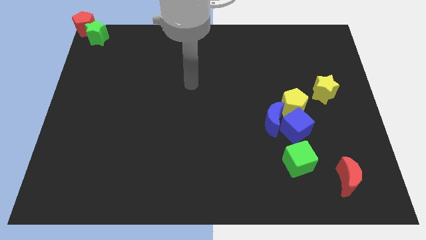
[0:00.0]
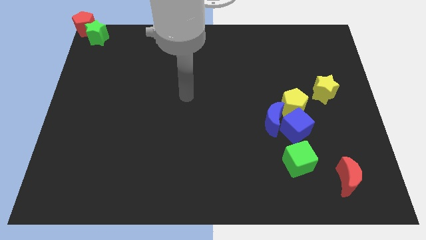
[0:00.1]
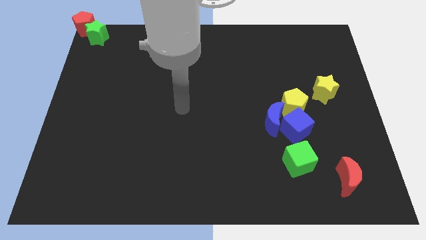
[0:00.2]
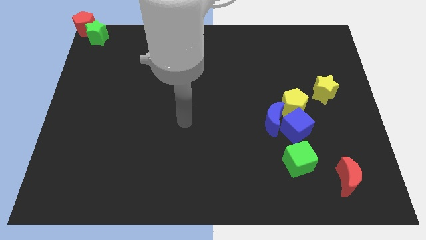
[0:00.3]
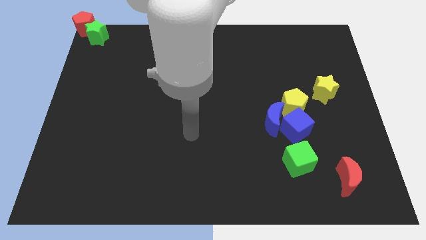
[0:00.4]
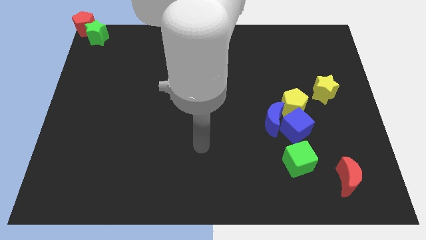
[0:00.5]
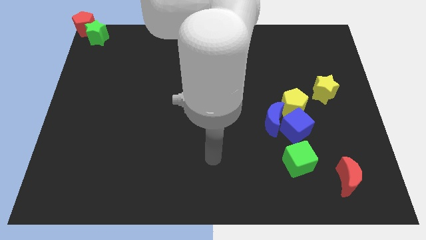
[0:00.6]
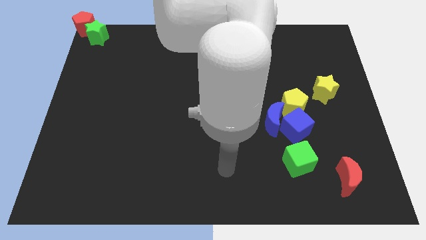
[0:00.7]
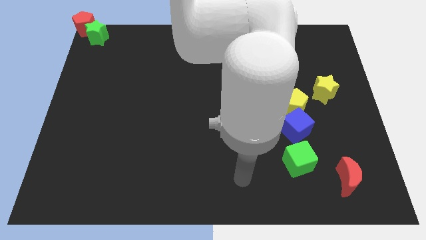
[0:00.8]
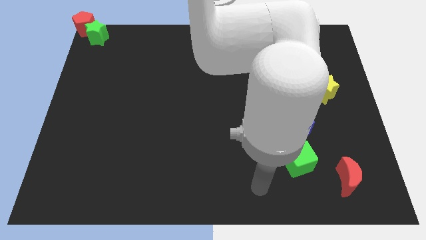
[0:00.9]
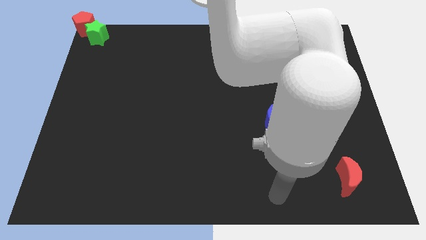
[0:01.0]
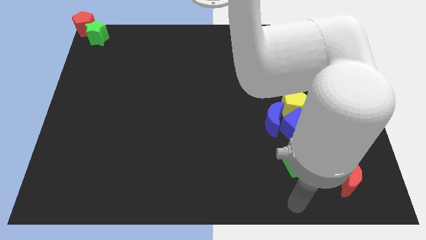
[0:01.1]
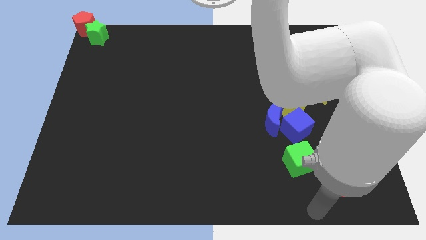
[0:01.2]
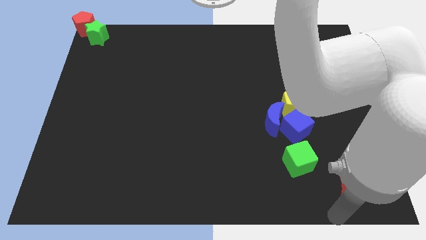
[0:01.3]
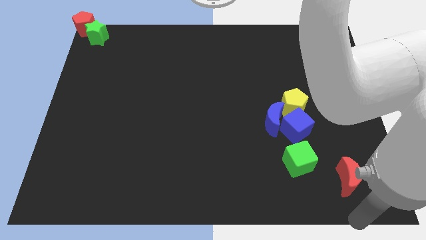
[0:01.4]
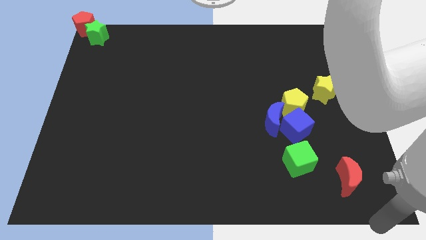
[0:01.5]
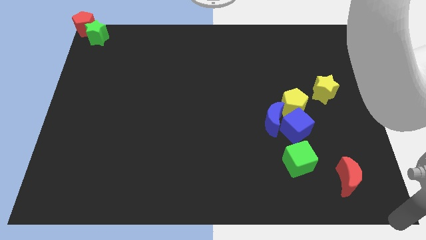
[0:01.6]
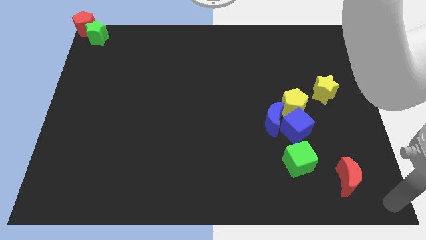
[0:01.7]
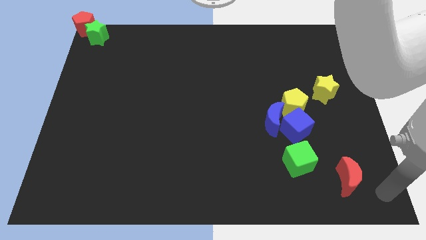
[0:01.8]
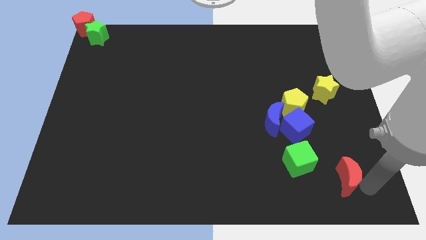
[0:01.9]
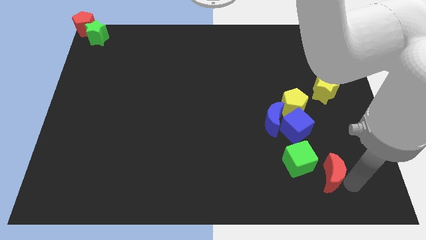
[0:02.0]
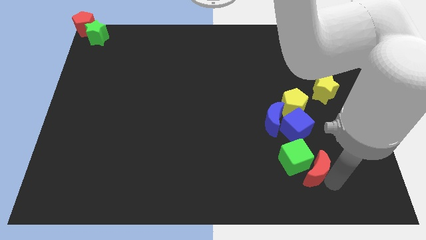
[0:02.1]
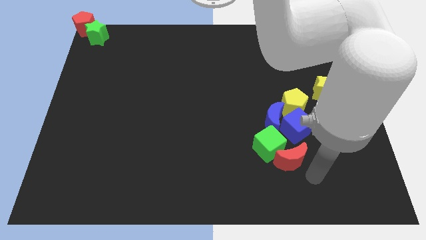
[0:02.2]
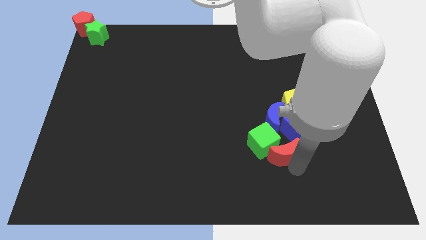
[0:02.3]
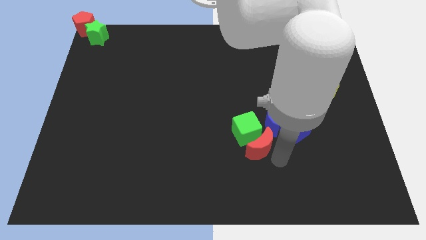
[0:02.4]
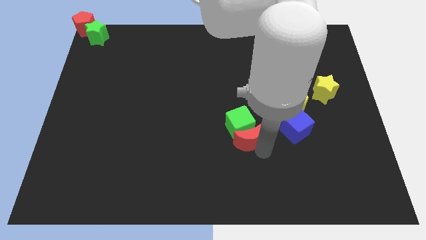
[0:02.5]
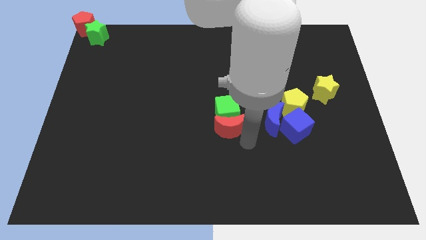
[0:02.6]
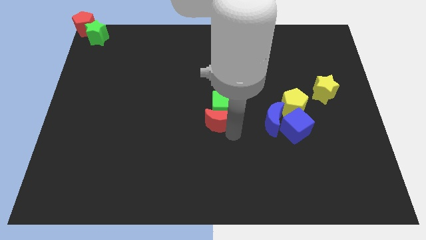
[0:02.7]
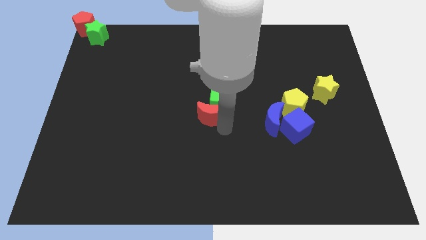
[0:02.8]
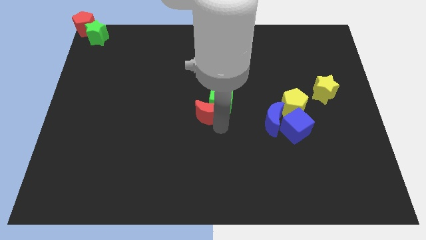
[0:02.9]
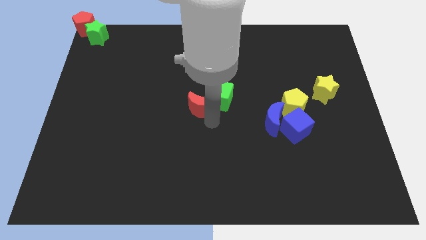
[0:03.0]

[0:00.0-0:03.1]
push red moon and green cube in to center

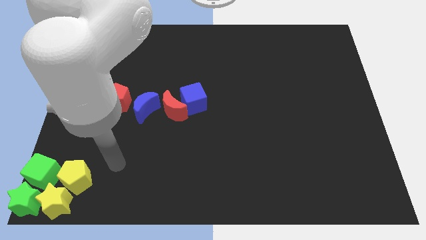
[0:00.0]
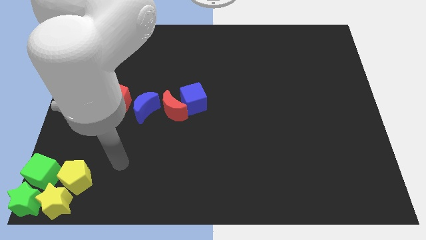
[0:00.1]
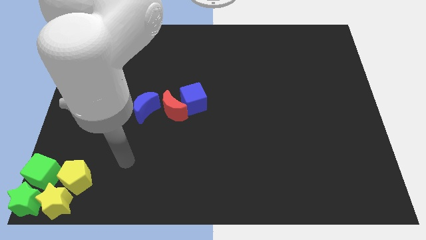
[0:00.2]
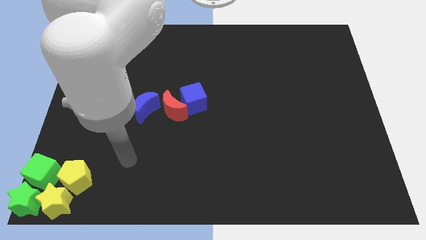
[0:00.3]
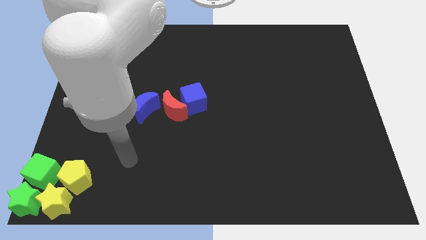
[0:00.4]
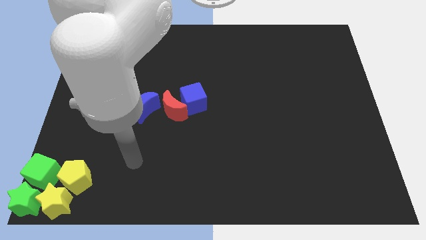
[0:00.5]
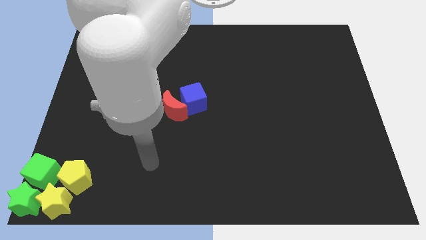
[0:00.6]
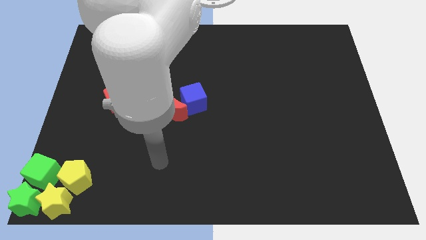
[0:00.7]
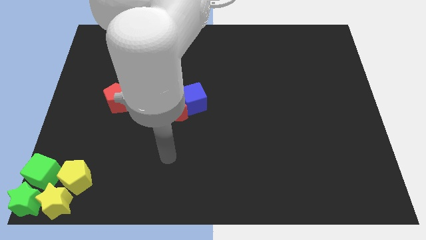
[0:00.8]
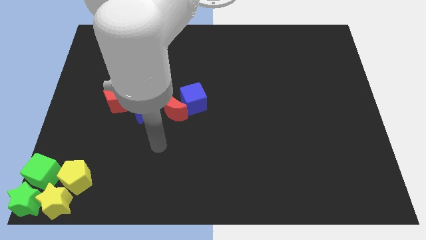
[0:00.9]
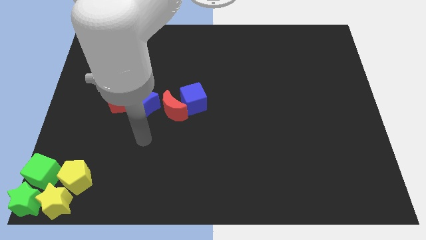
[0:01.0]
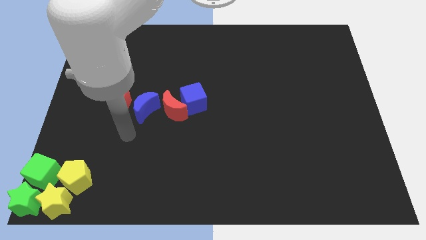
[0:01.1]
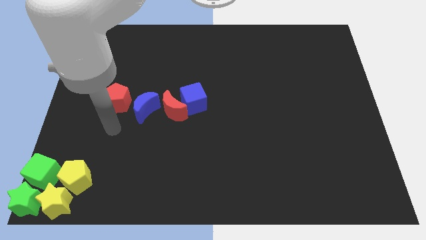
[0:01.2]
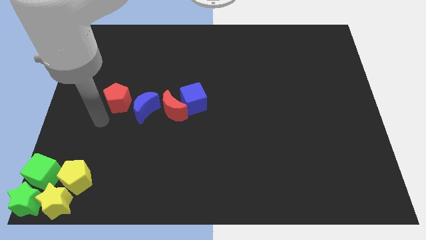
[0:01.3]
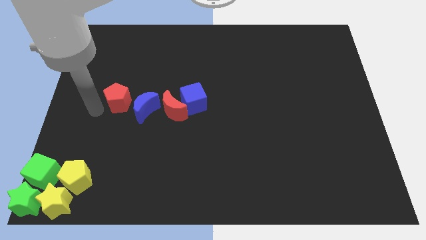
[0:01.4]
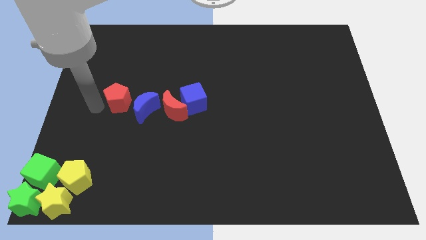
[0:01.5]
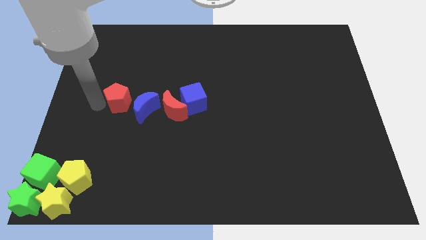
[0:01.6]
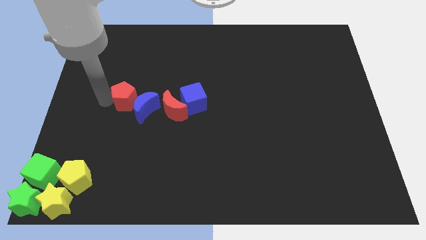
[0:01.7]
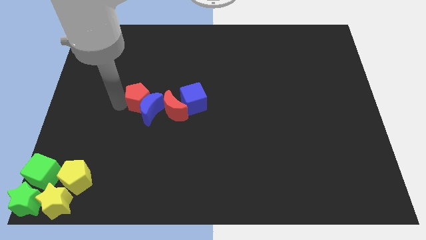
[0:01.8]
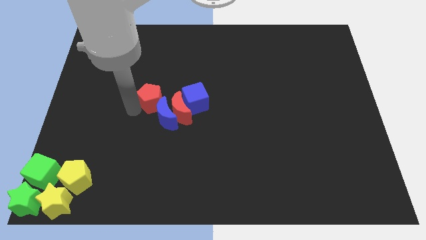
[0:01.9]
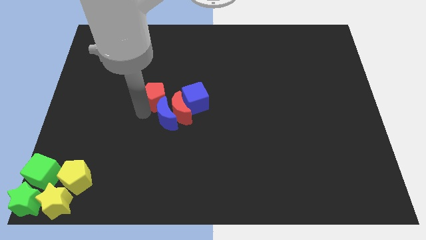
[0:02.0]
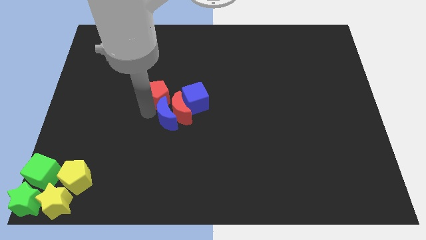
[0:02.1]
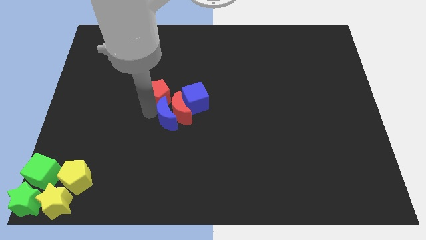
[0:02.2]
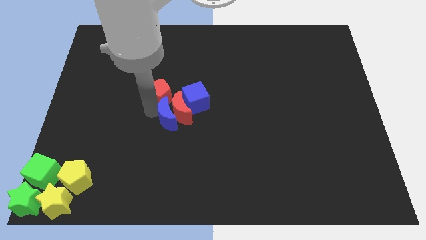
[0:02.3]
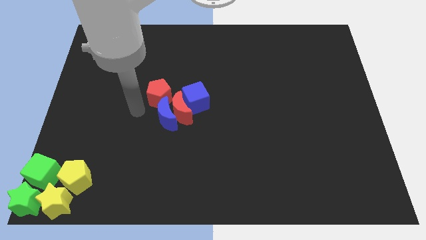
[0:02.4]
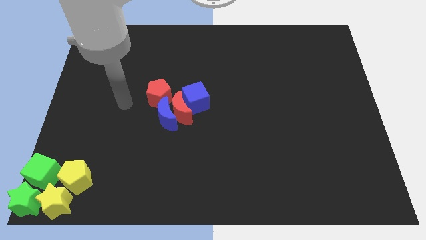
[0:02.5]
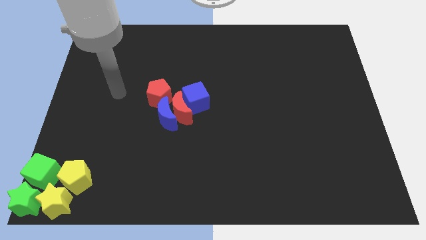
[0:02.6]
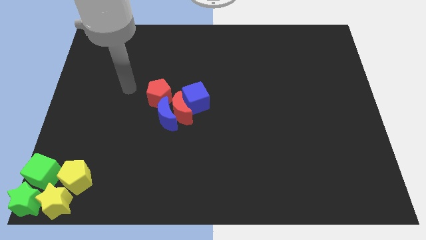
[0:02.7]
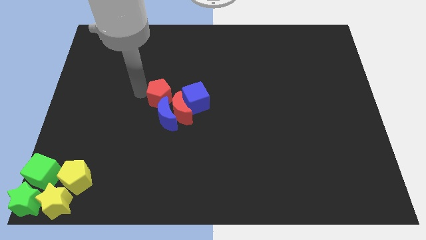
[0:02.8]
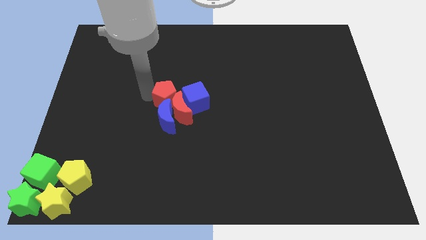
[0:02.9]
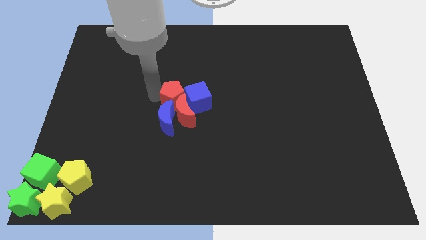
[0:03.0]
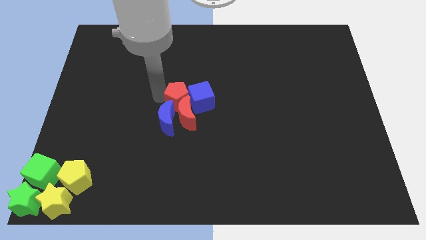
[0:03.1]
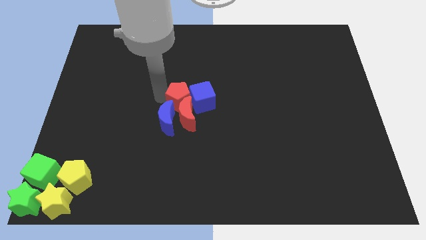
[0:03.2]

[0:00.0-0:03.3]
push the red pentagon above the red crescent

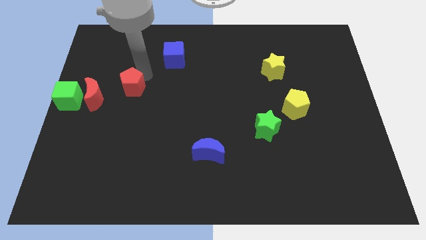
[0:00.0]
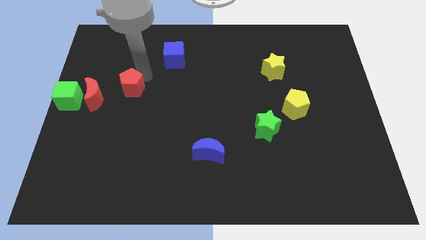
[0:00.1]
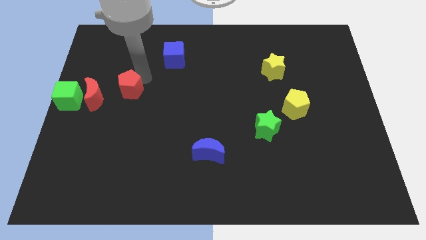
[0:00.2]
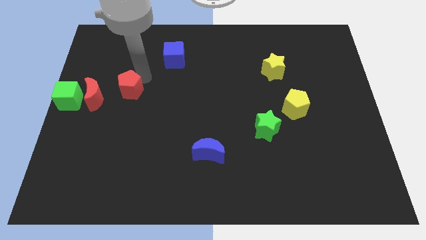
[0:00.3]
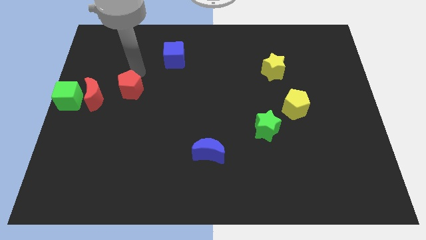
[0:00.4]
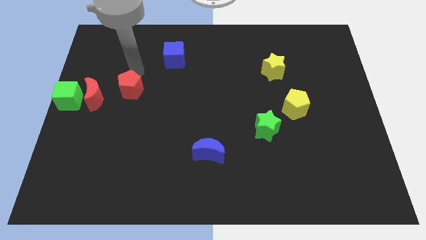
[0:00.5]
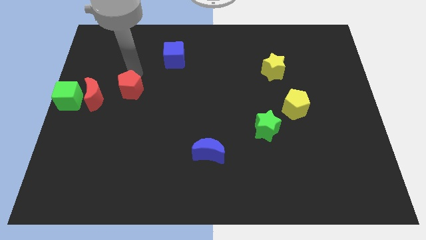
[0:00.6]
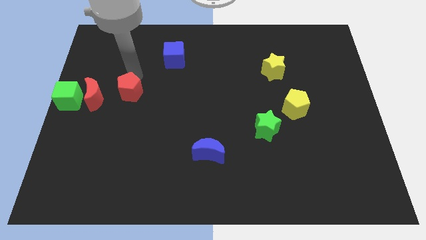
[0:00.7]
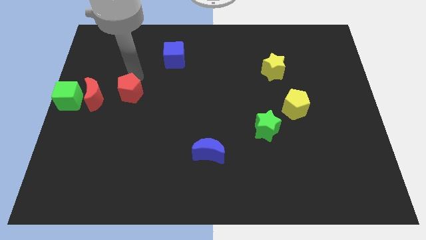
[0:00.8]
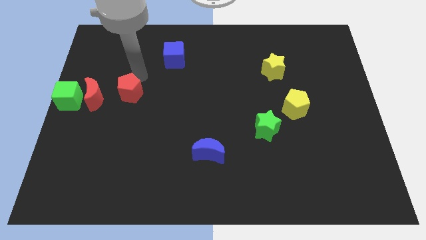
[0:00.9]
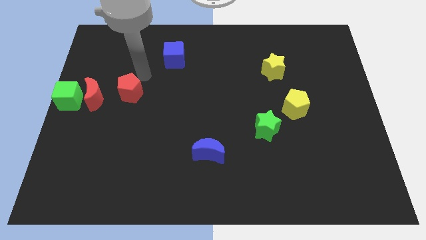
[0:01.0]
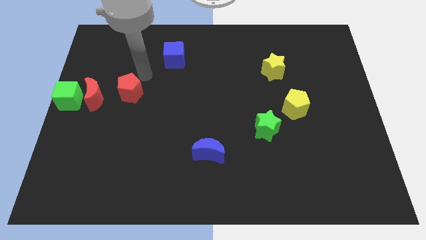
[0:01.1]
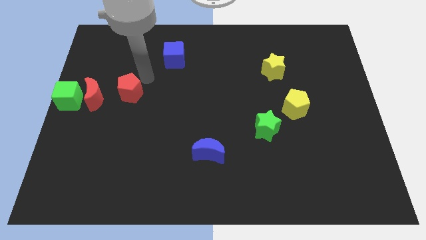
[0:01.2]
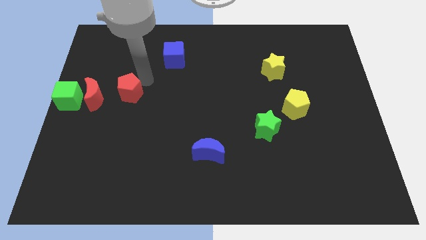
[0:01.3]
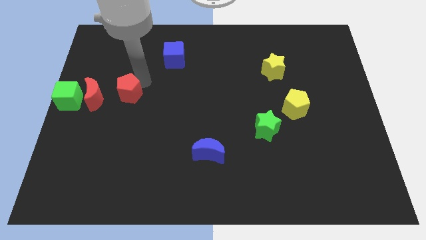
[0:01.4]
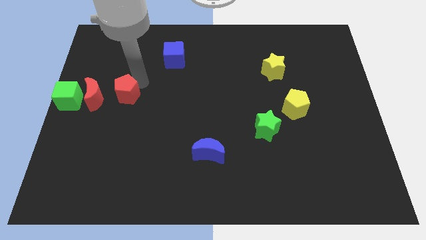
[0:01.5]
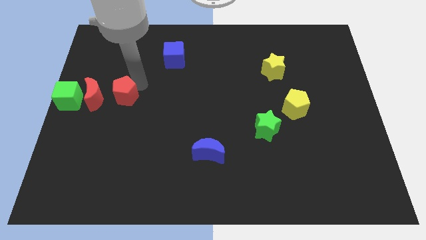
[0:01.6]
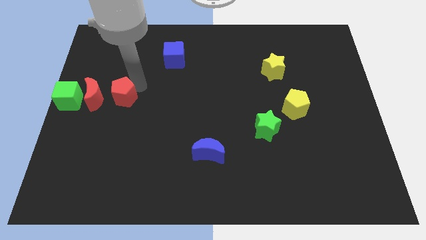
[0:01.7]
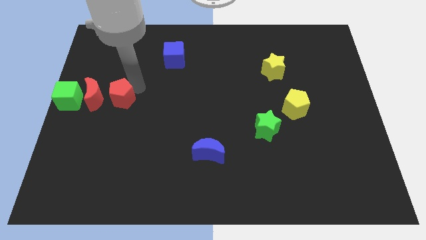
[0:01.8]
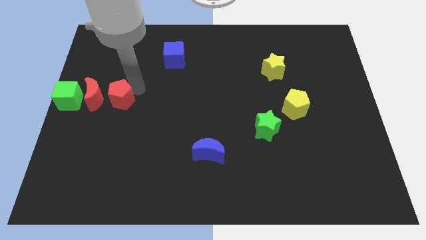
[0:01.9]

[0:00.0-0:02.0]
push the red pentagon to the center left side of the board

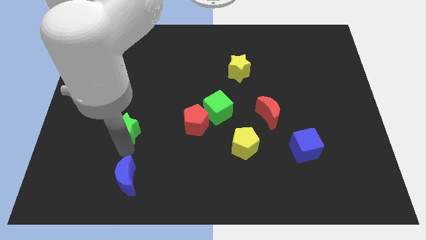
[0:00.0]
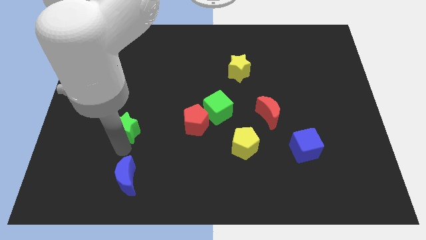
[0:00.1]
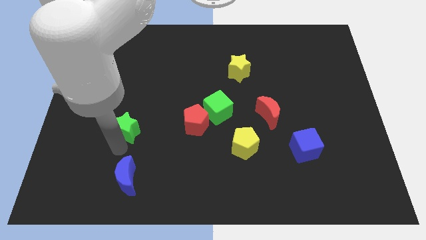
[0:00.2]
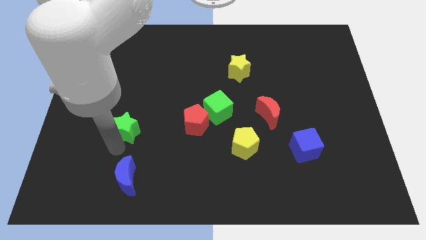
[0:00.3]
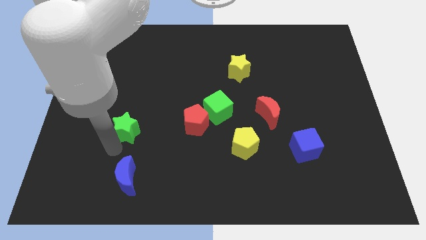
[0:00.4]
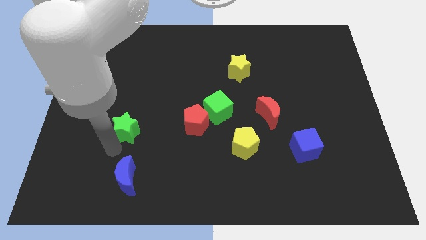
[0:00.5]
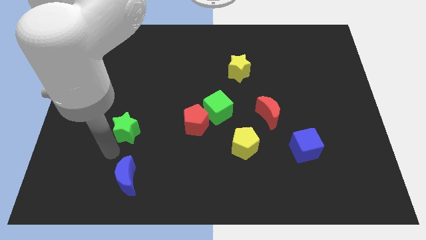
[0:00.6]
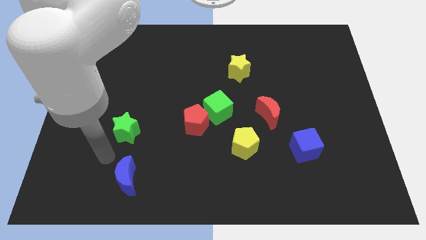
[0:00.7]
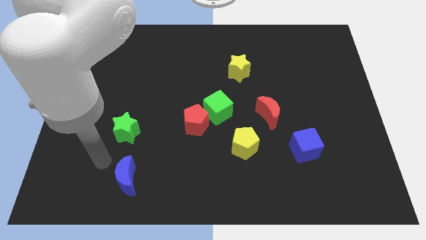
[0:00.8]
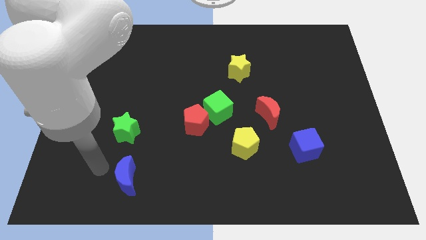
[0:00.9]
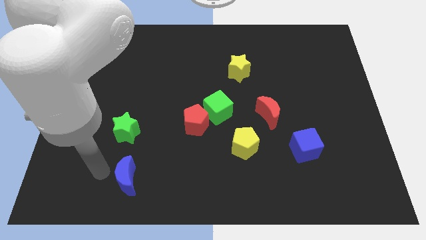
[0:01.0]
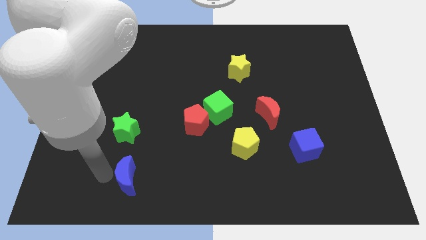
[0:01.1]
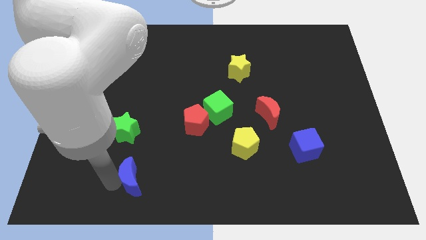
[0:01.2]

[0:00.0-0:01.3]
move your arm to the left side of the blue moon
